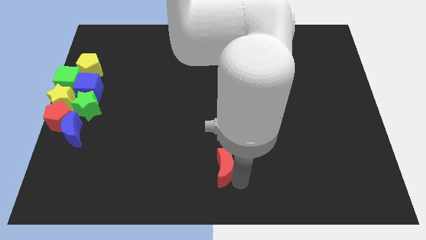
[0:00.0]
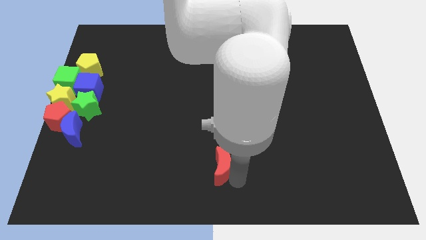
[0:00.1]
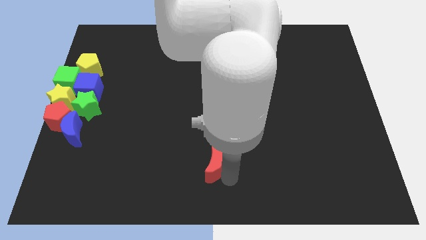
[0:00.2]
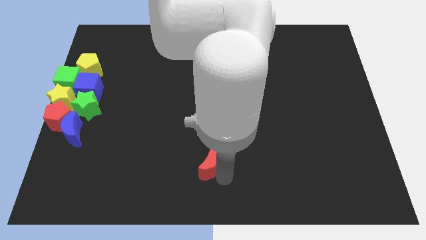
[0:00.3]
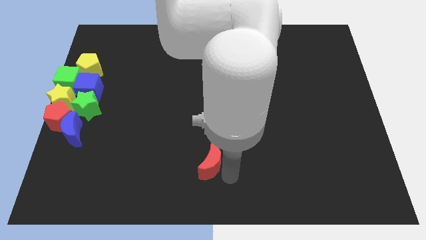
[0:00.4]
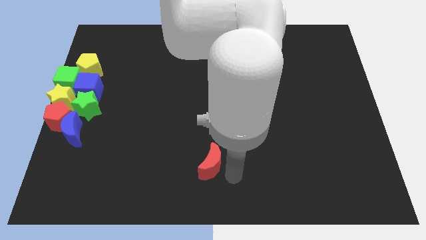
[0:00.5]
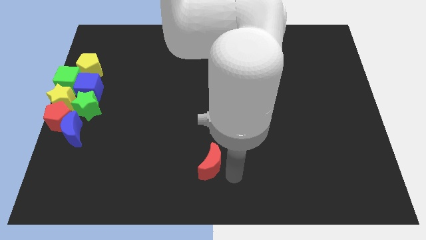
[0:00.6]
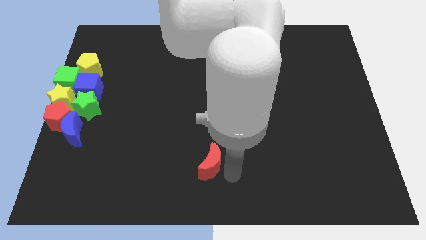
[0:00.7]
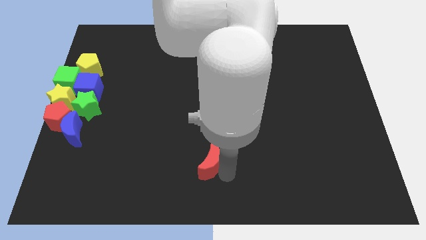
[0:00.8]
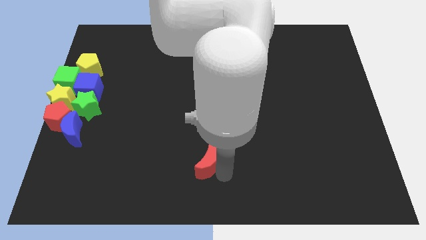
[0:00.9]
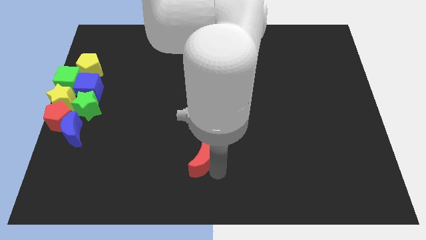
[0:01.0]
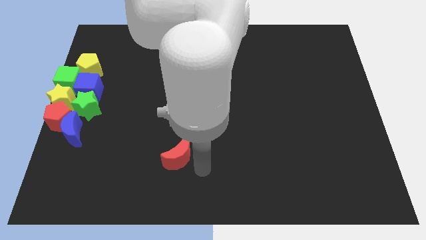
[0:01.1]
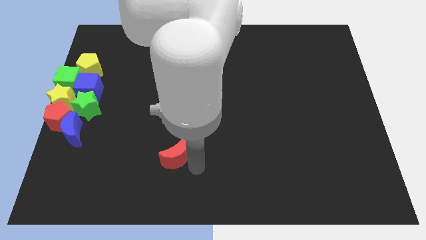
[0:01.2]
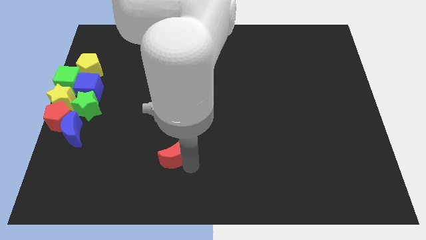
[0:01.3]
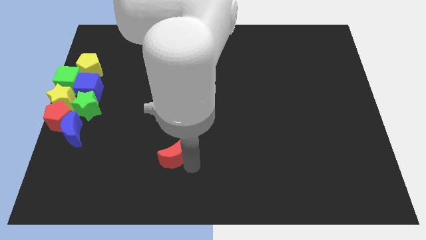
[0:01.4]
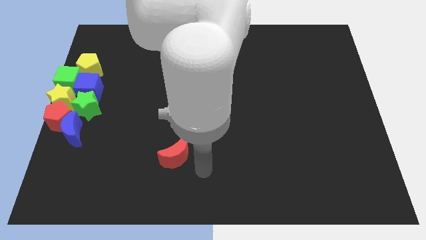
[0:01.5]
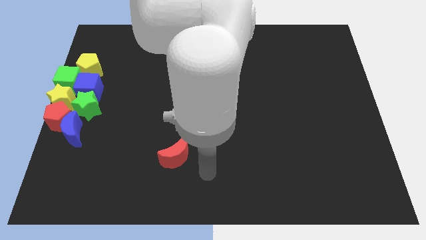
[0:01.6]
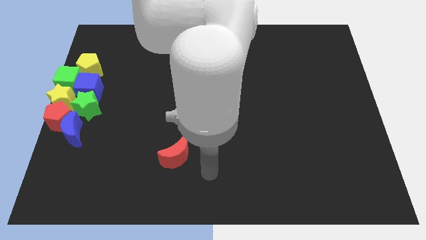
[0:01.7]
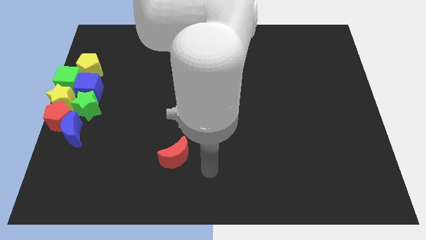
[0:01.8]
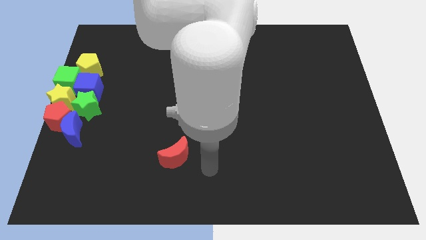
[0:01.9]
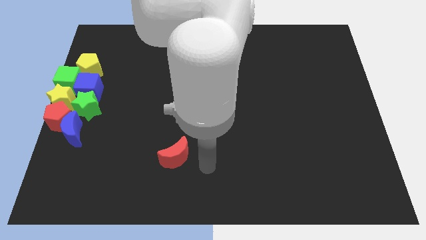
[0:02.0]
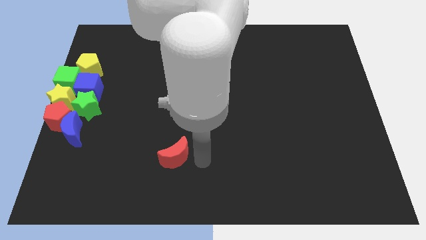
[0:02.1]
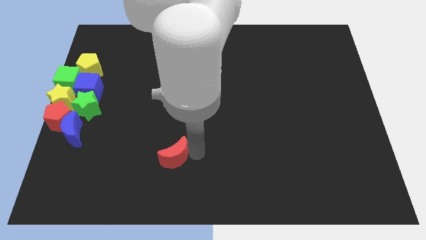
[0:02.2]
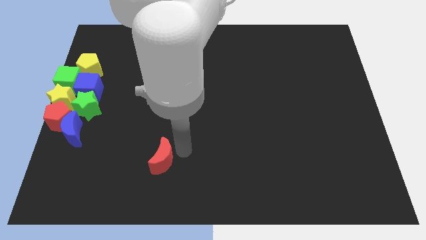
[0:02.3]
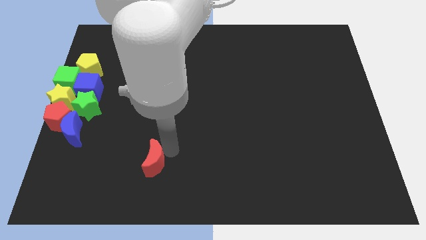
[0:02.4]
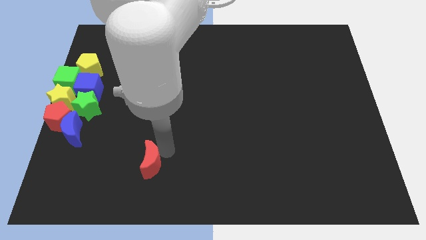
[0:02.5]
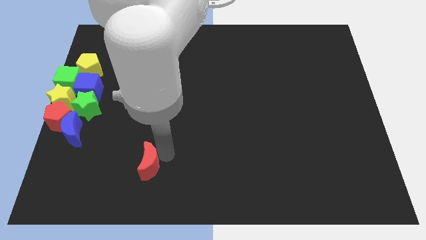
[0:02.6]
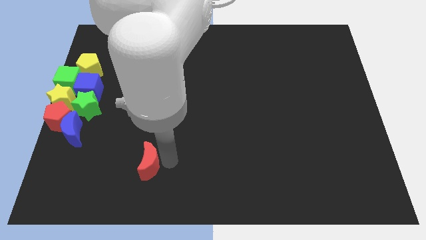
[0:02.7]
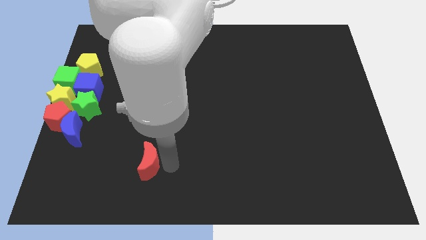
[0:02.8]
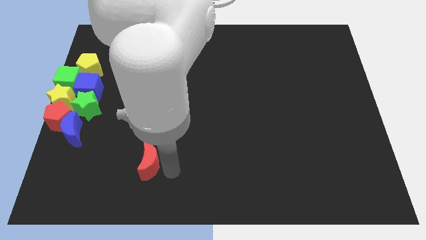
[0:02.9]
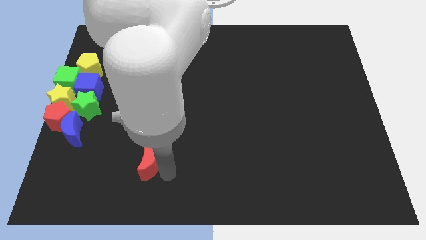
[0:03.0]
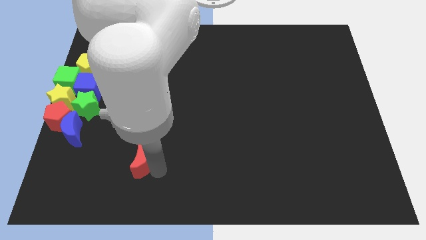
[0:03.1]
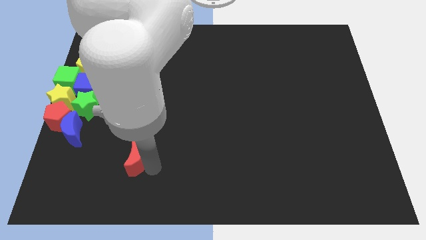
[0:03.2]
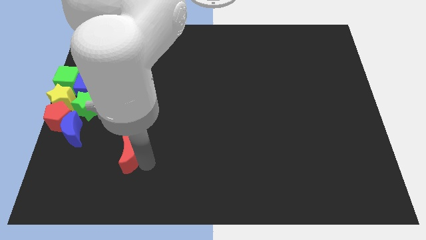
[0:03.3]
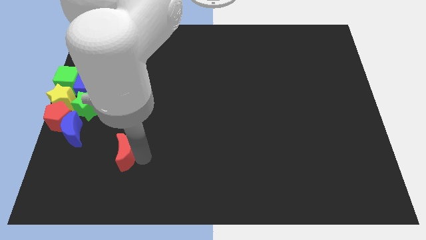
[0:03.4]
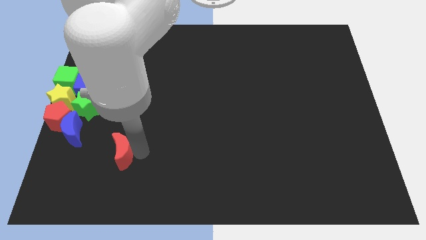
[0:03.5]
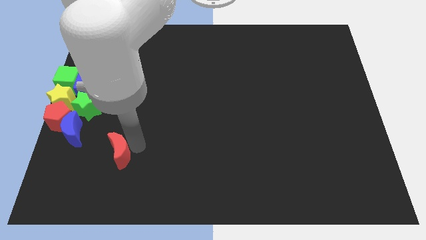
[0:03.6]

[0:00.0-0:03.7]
push the red crescent towards the blue crescent

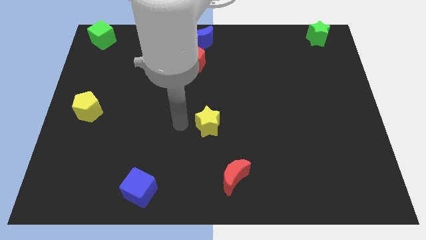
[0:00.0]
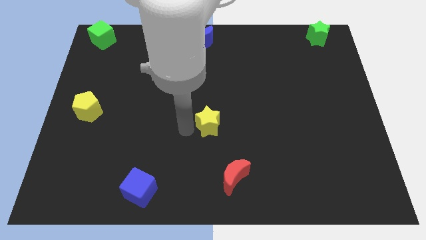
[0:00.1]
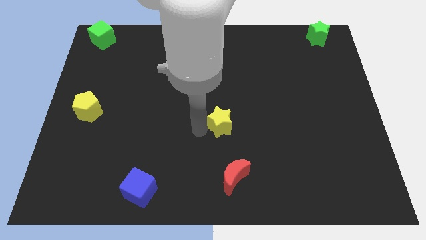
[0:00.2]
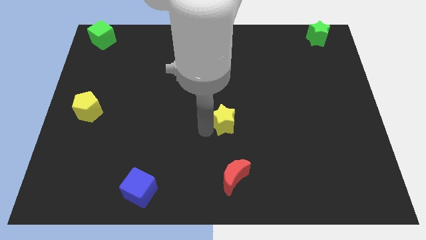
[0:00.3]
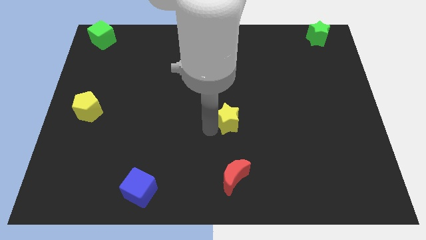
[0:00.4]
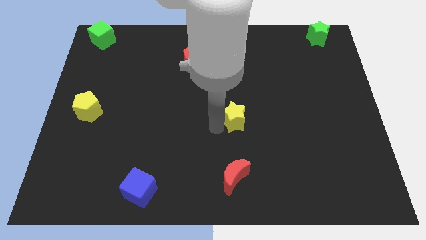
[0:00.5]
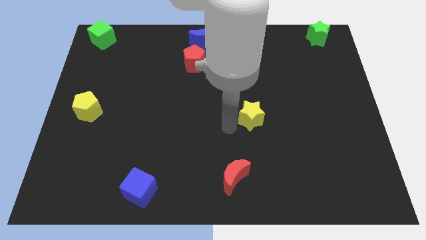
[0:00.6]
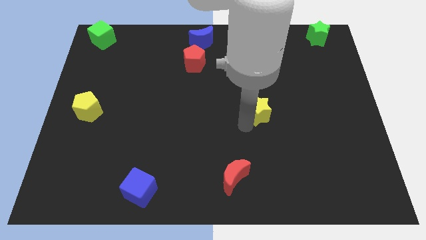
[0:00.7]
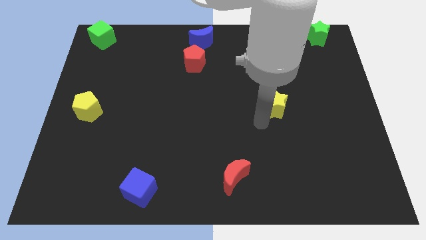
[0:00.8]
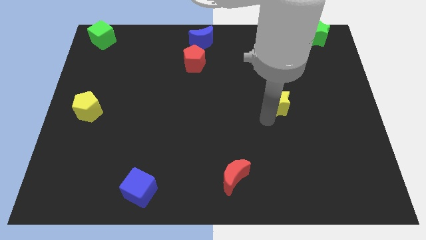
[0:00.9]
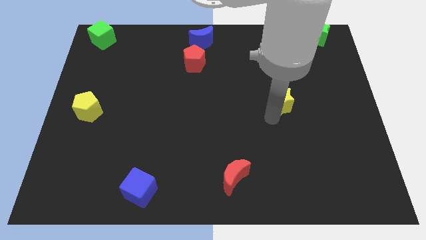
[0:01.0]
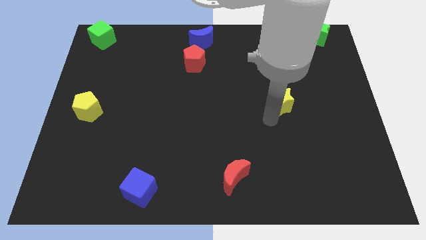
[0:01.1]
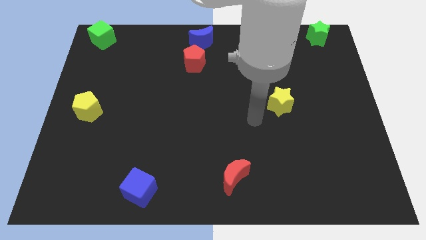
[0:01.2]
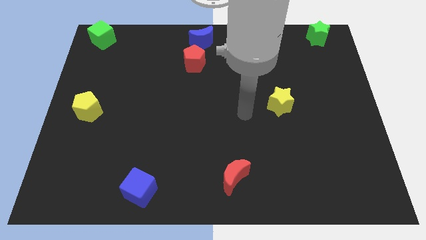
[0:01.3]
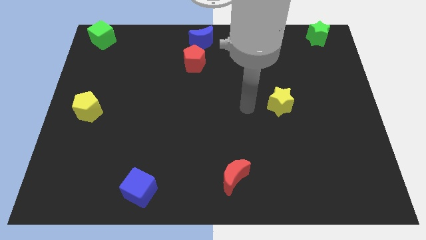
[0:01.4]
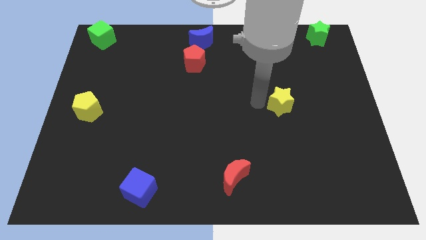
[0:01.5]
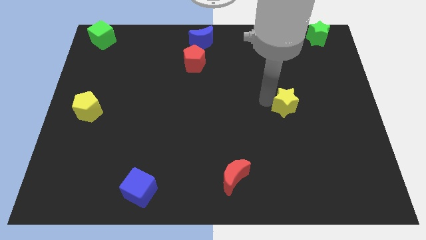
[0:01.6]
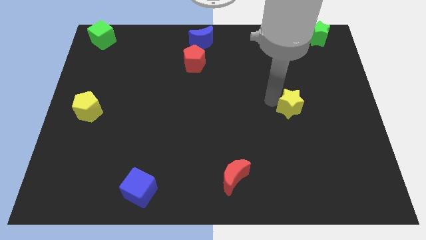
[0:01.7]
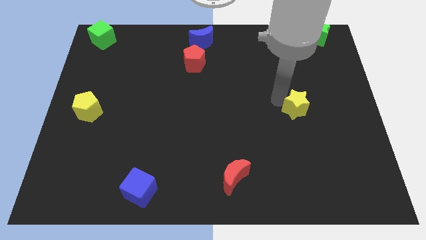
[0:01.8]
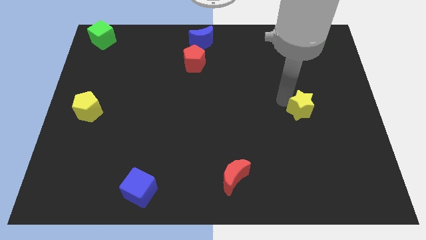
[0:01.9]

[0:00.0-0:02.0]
push the yellow star towards the center right side of the board

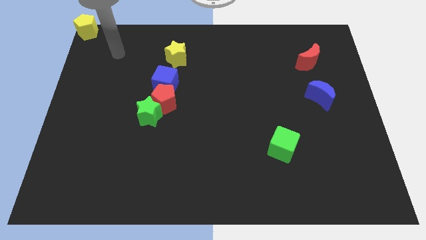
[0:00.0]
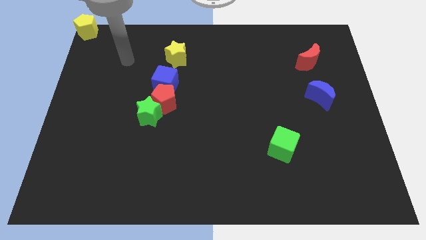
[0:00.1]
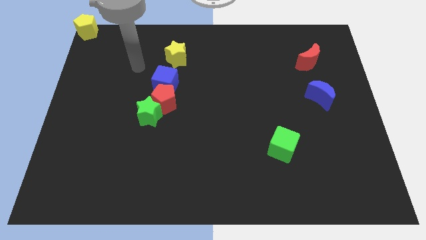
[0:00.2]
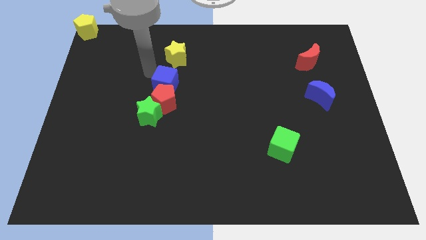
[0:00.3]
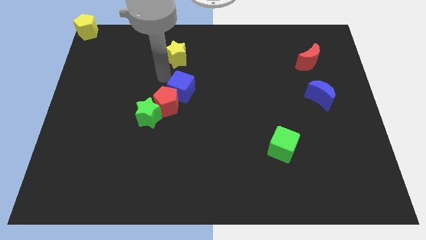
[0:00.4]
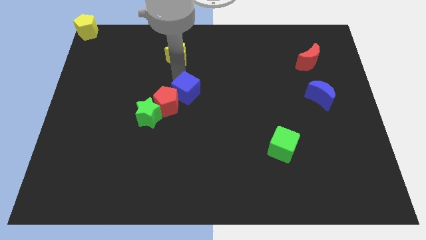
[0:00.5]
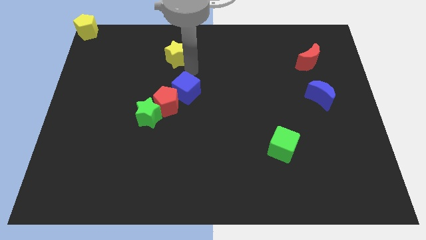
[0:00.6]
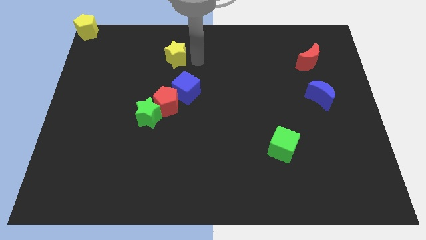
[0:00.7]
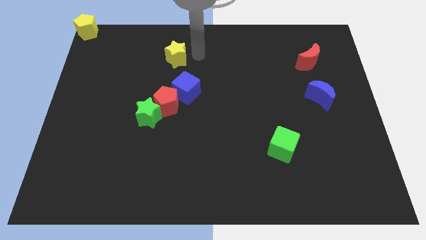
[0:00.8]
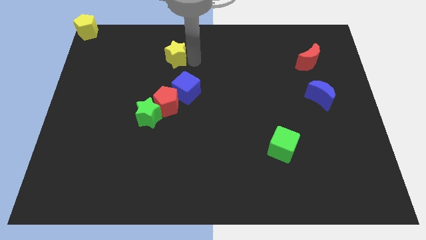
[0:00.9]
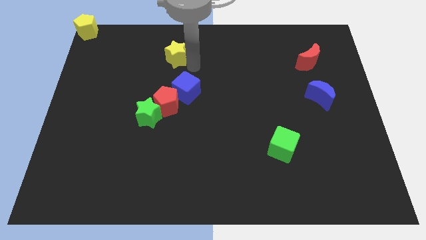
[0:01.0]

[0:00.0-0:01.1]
move blue cube from yellow star

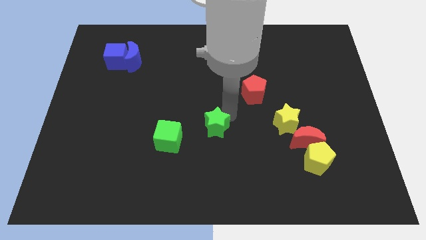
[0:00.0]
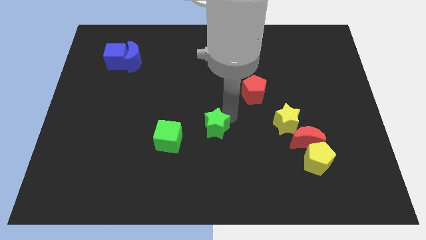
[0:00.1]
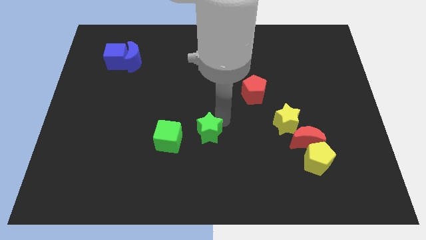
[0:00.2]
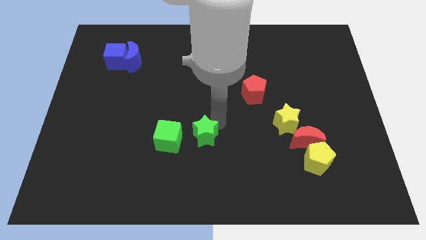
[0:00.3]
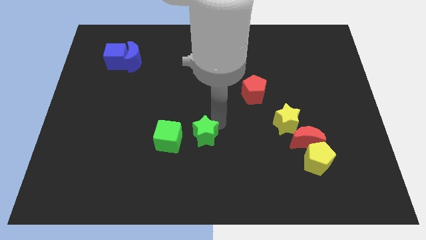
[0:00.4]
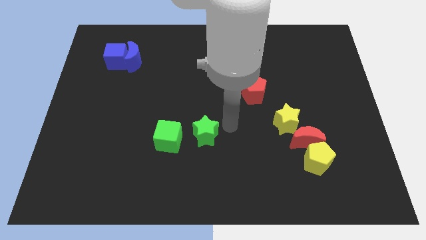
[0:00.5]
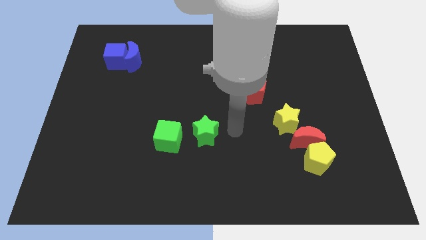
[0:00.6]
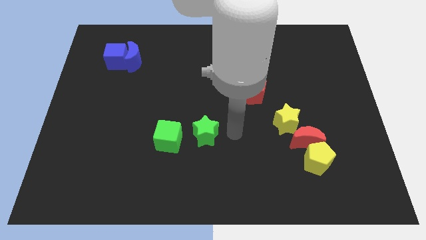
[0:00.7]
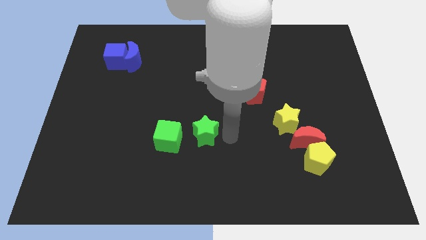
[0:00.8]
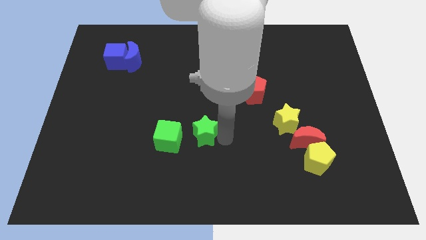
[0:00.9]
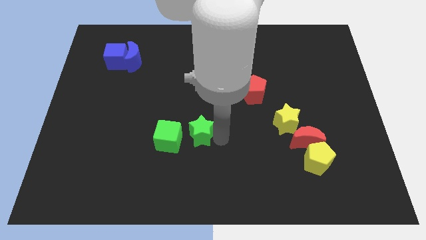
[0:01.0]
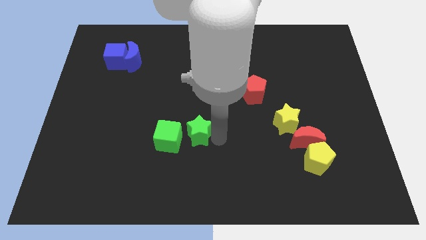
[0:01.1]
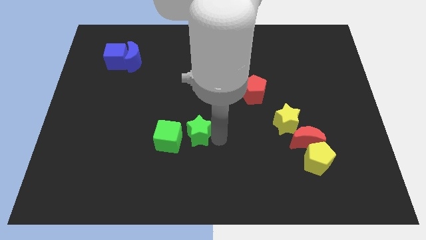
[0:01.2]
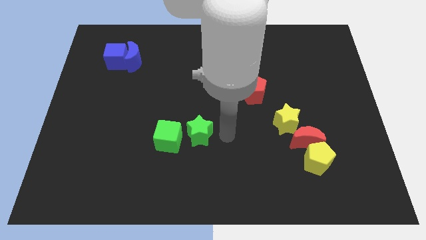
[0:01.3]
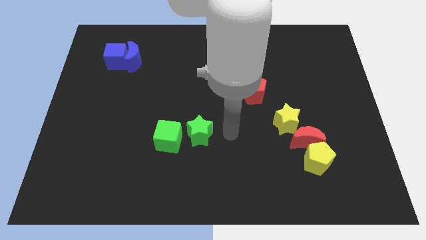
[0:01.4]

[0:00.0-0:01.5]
place green star to the right of green cube

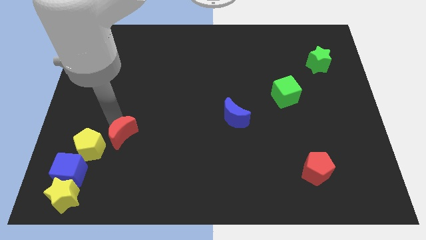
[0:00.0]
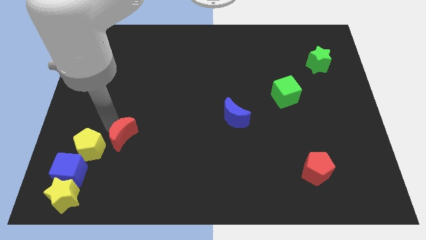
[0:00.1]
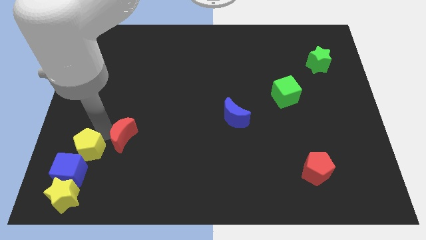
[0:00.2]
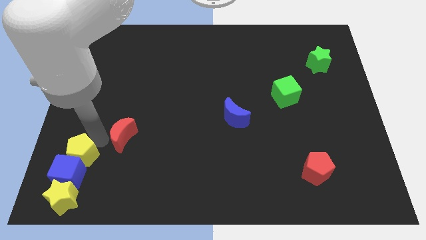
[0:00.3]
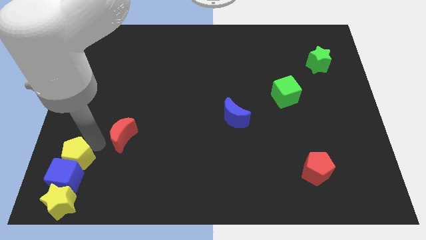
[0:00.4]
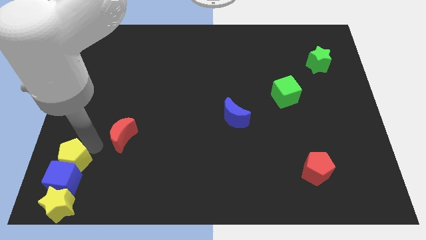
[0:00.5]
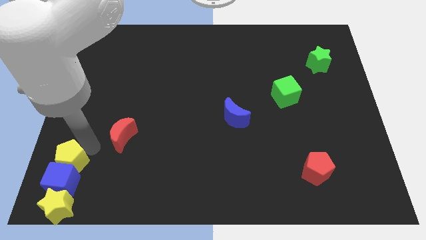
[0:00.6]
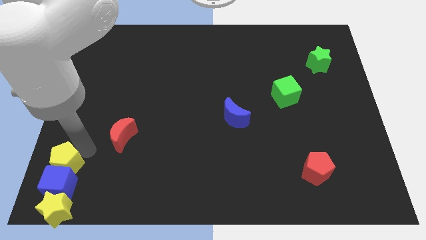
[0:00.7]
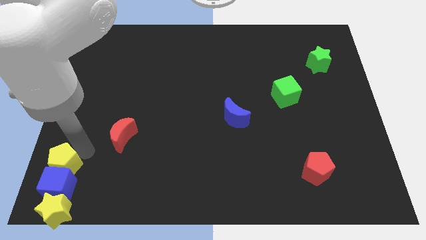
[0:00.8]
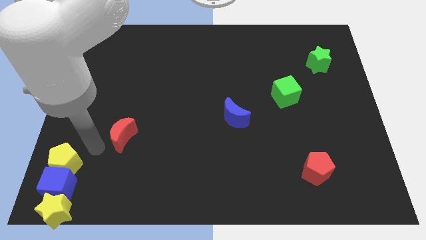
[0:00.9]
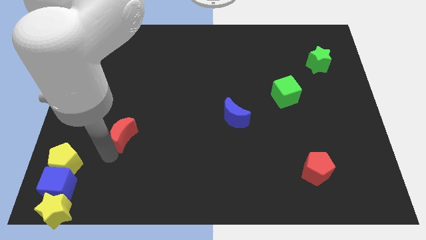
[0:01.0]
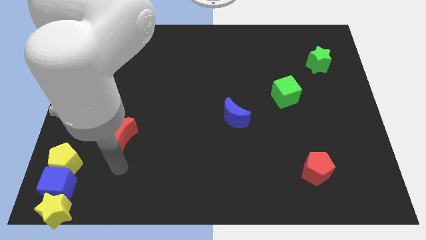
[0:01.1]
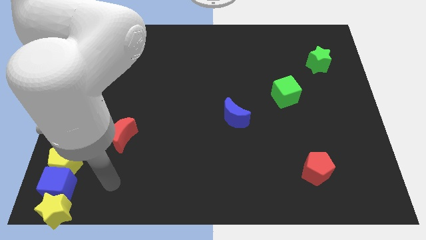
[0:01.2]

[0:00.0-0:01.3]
push yellow pentagon in to blue cube
